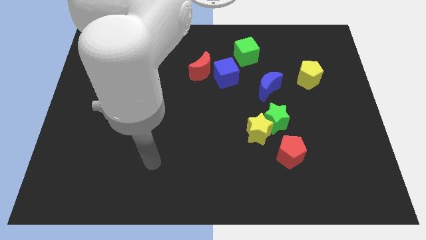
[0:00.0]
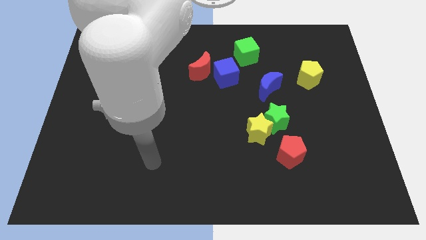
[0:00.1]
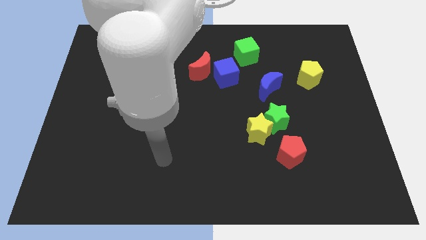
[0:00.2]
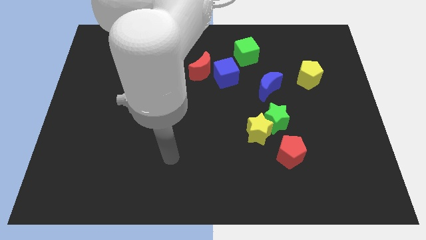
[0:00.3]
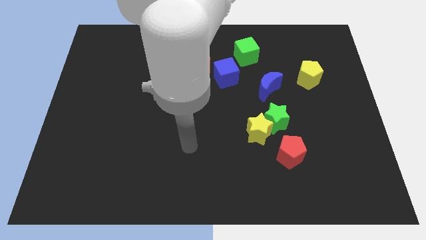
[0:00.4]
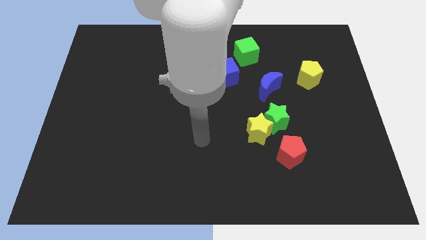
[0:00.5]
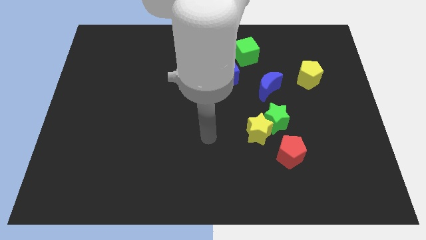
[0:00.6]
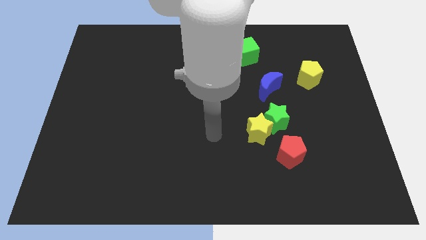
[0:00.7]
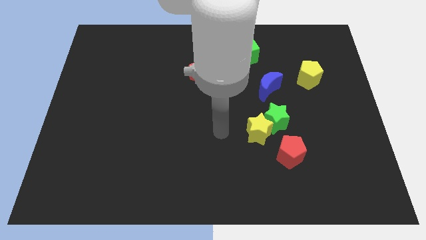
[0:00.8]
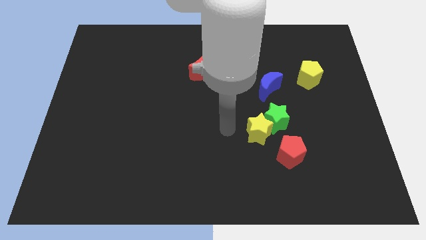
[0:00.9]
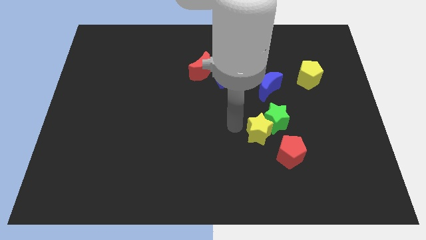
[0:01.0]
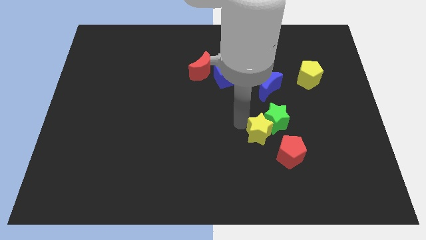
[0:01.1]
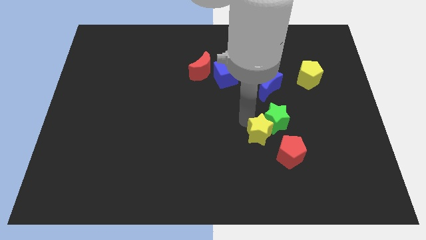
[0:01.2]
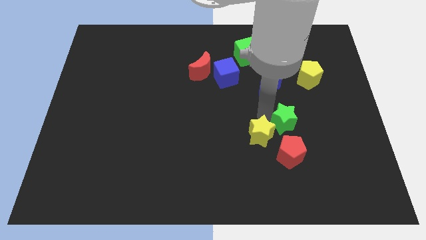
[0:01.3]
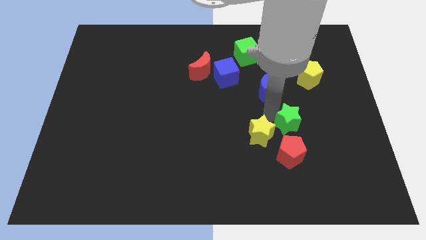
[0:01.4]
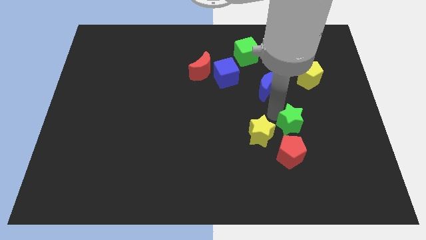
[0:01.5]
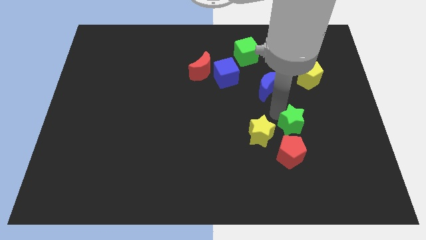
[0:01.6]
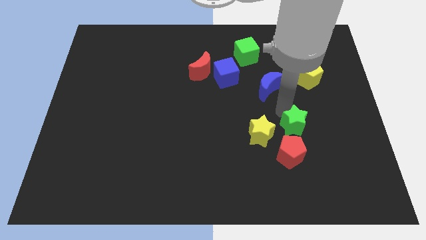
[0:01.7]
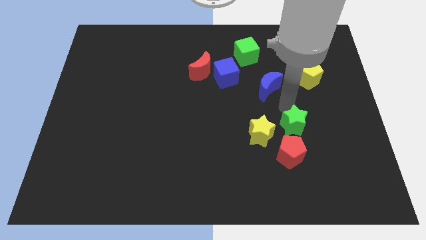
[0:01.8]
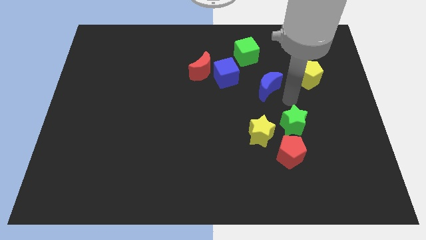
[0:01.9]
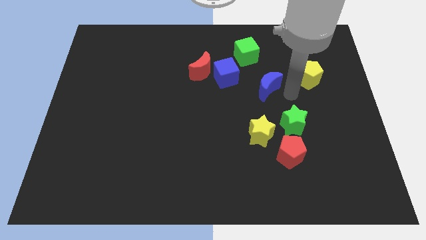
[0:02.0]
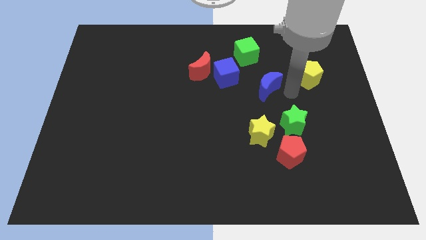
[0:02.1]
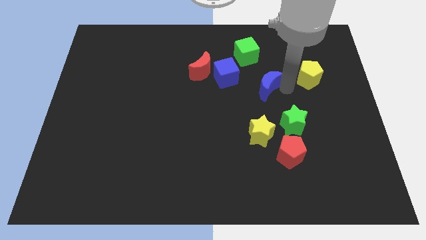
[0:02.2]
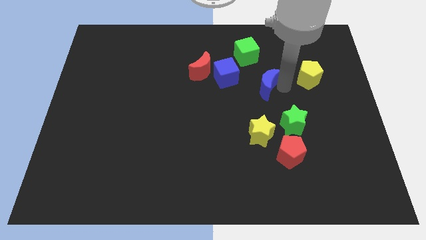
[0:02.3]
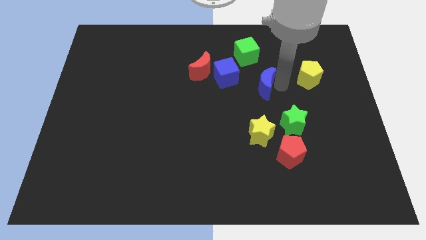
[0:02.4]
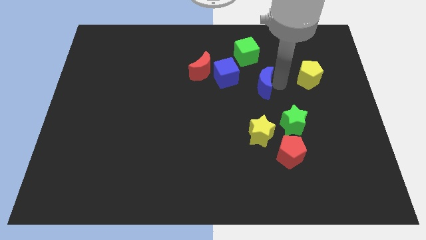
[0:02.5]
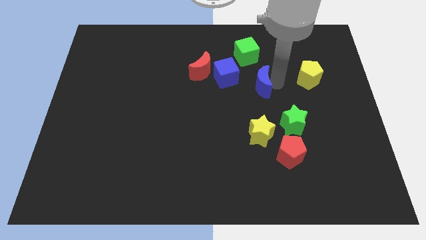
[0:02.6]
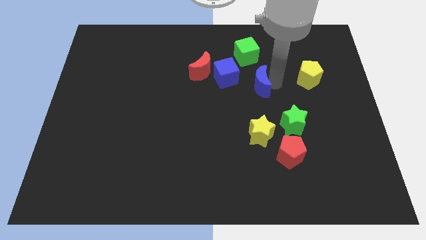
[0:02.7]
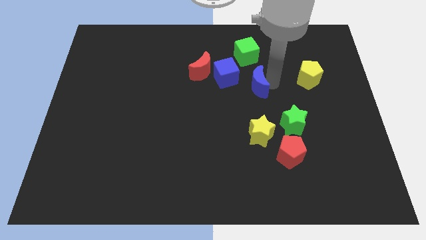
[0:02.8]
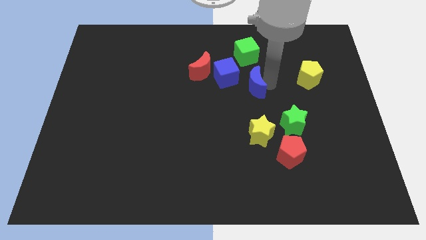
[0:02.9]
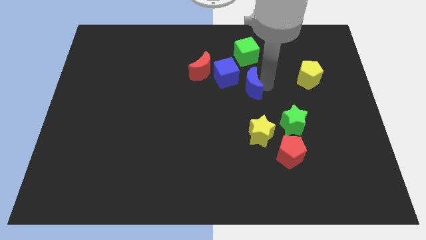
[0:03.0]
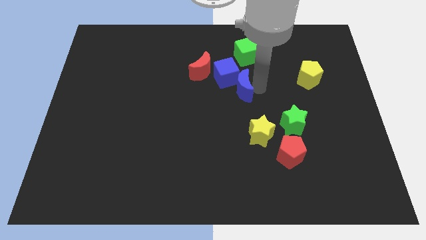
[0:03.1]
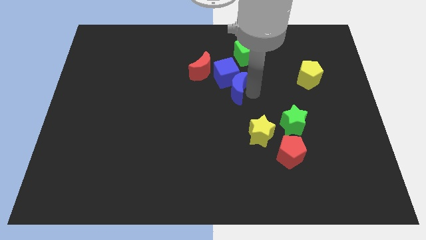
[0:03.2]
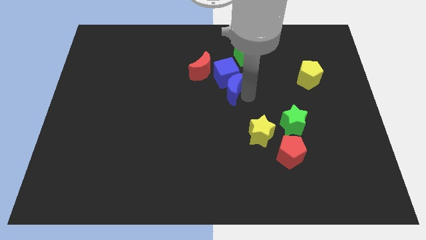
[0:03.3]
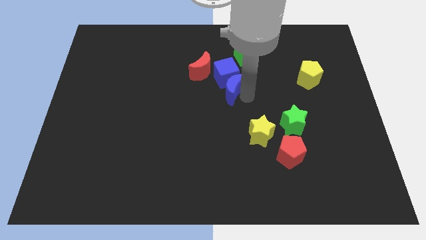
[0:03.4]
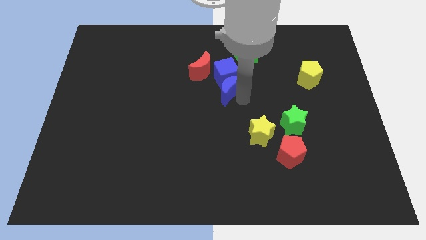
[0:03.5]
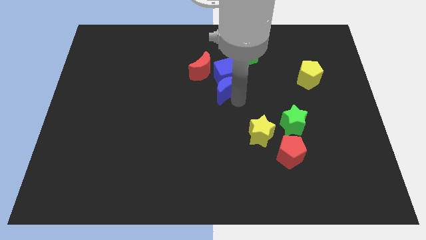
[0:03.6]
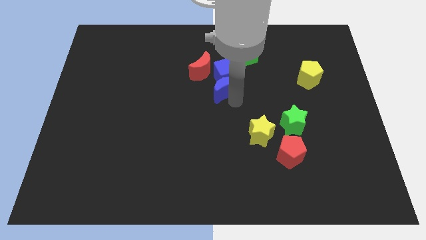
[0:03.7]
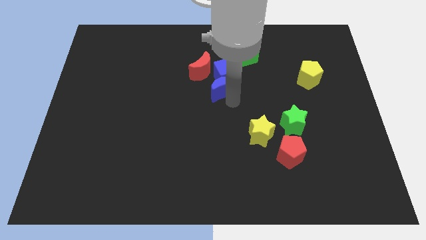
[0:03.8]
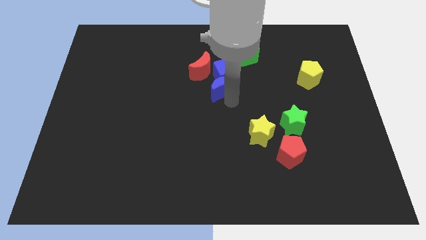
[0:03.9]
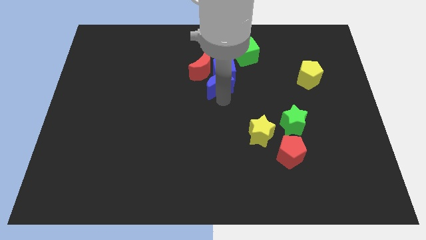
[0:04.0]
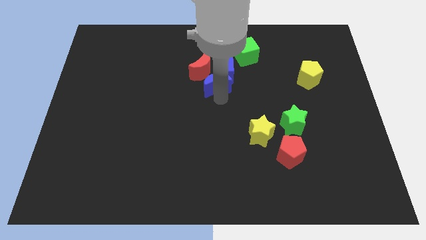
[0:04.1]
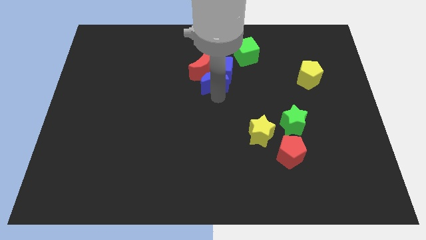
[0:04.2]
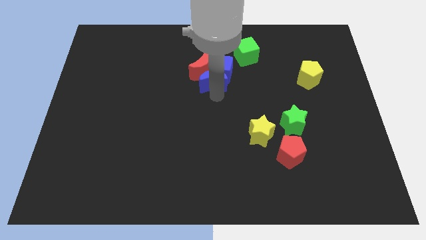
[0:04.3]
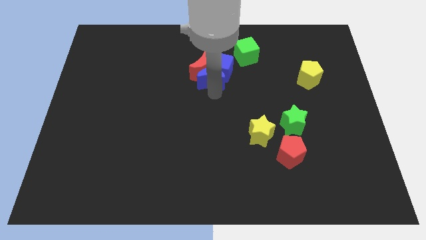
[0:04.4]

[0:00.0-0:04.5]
push the blue moon to the red moon

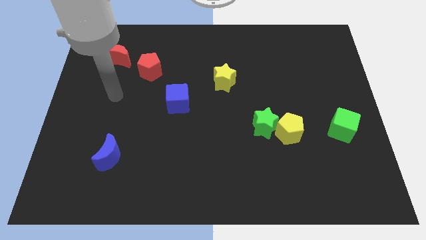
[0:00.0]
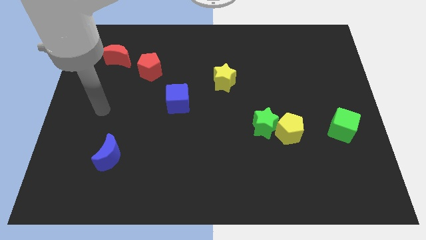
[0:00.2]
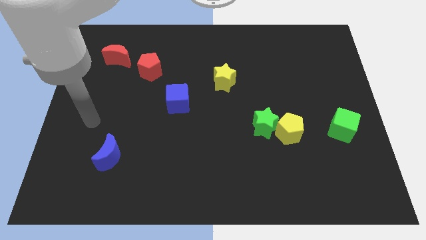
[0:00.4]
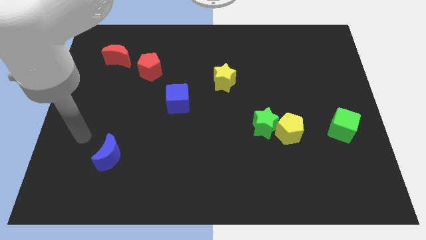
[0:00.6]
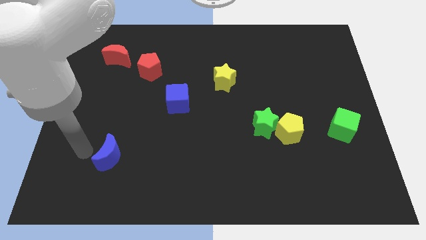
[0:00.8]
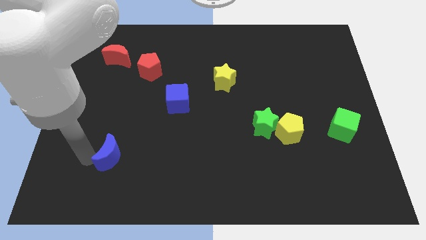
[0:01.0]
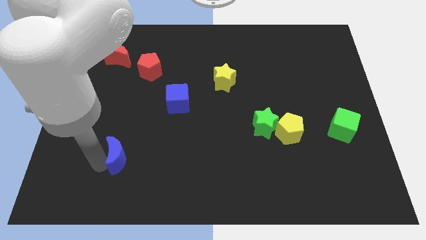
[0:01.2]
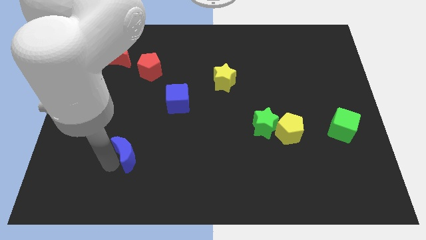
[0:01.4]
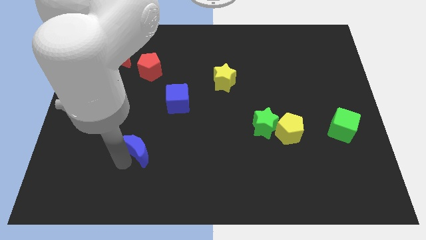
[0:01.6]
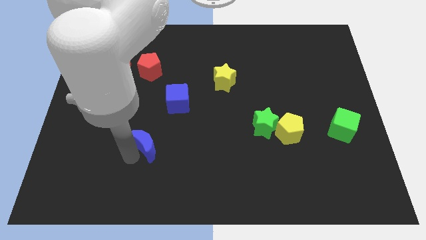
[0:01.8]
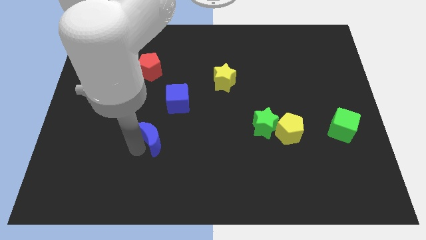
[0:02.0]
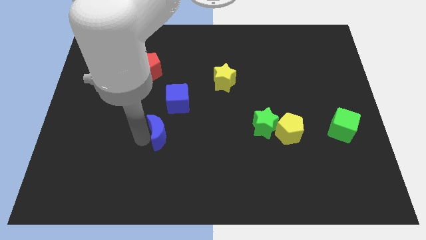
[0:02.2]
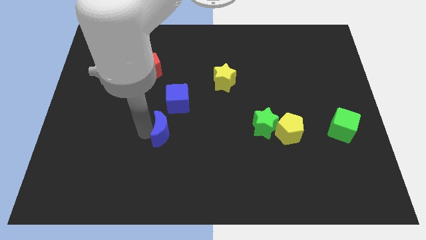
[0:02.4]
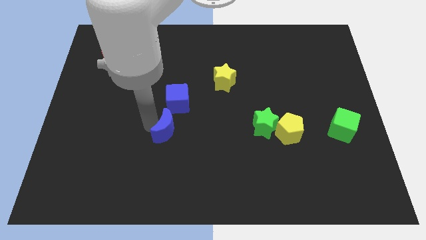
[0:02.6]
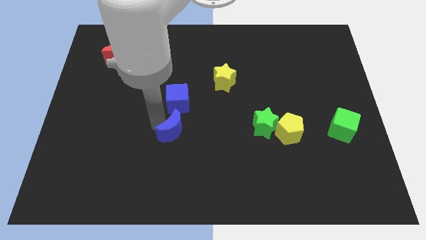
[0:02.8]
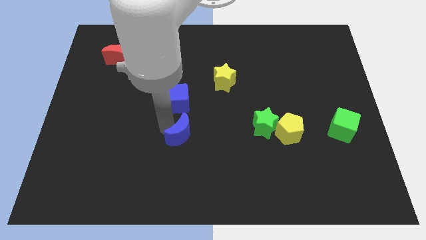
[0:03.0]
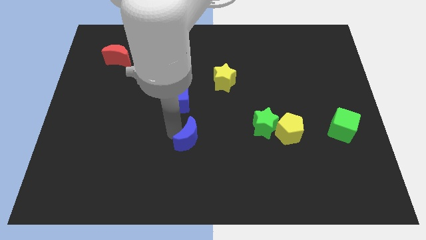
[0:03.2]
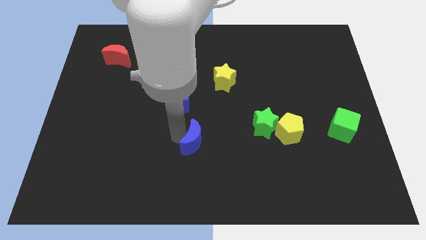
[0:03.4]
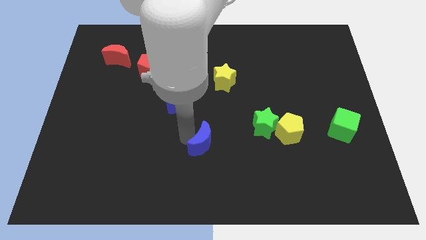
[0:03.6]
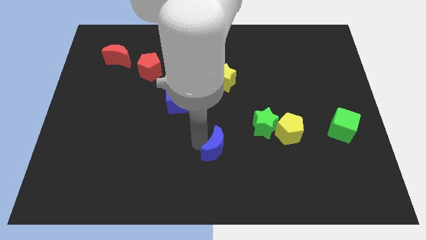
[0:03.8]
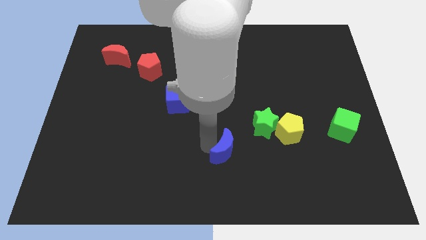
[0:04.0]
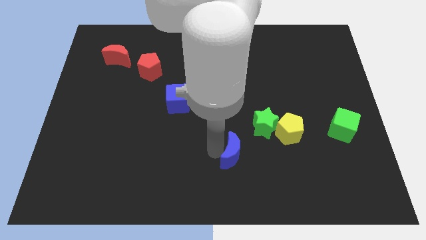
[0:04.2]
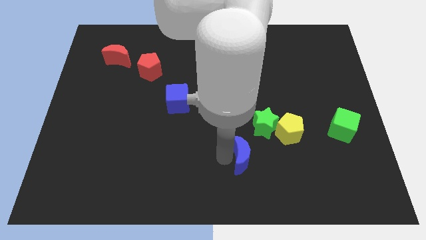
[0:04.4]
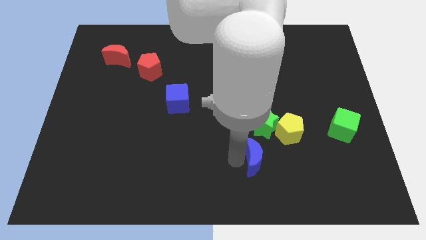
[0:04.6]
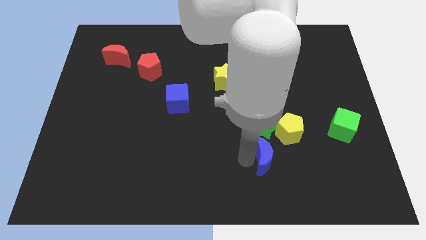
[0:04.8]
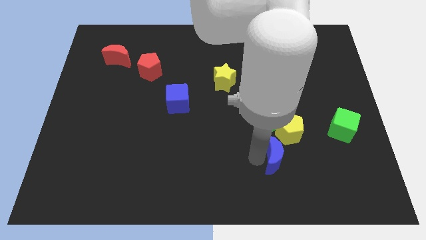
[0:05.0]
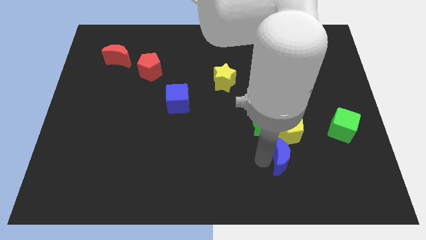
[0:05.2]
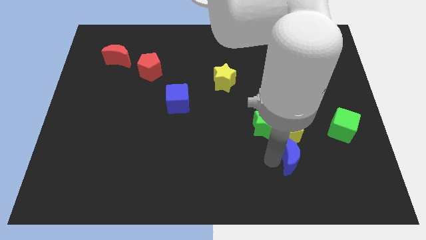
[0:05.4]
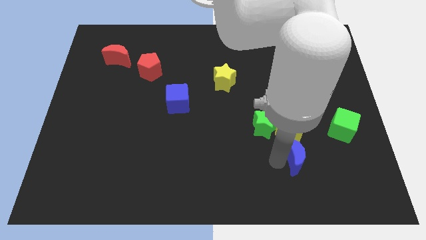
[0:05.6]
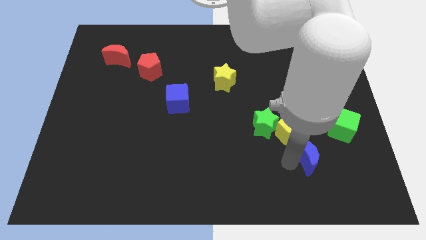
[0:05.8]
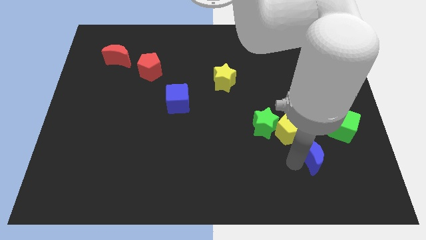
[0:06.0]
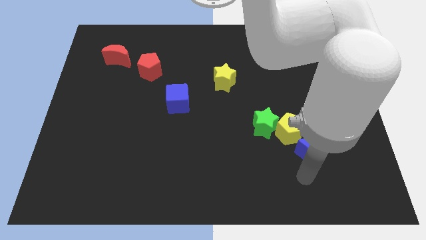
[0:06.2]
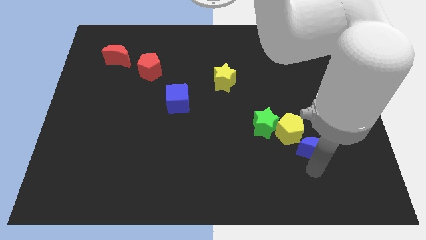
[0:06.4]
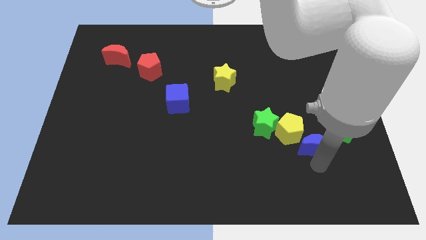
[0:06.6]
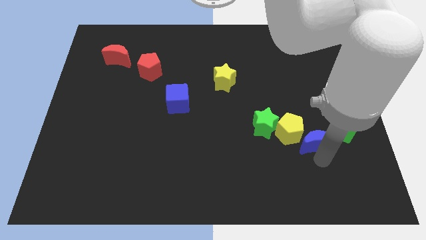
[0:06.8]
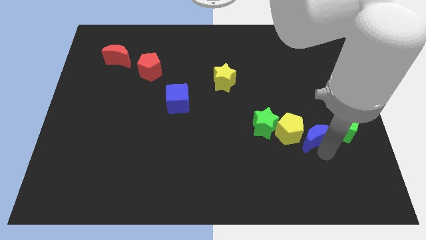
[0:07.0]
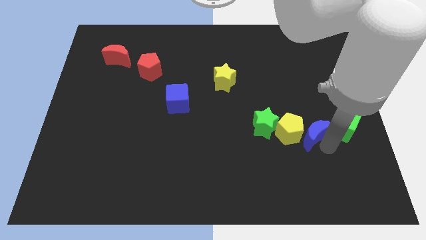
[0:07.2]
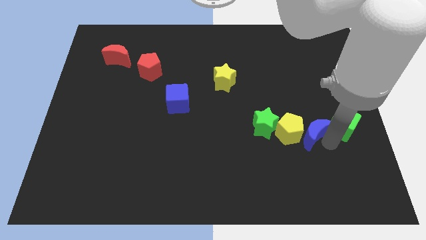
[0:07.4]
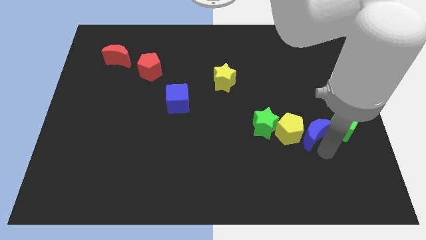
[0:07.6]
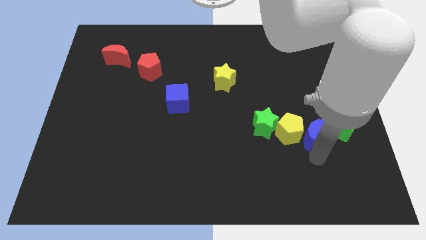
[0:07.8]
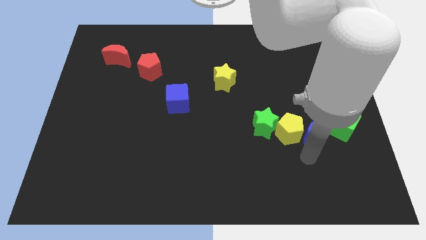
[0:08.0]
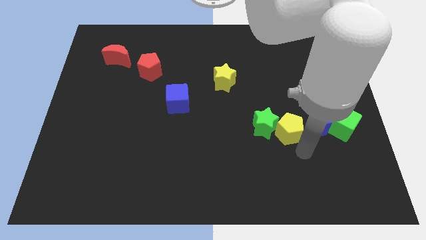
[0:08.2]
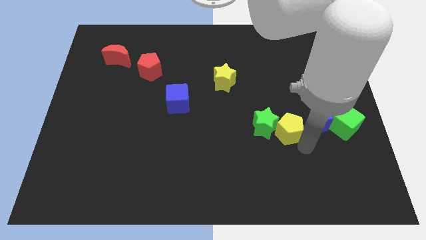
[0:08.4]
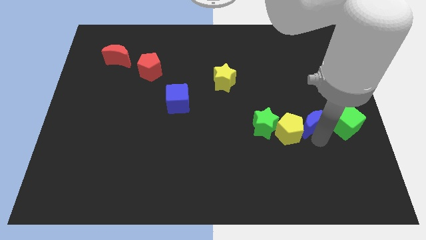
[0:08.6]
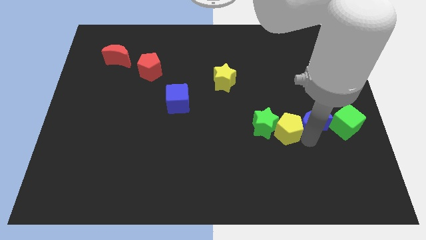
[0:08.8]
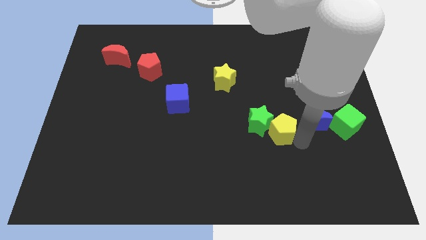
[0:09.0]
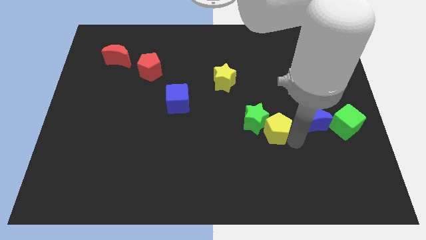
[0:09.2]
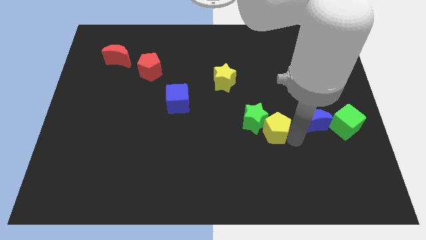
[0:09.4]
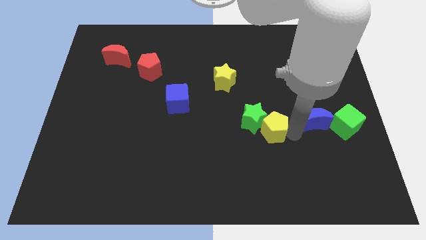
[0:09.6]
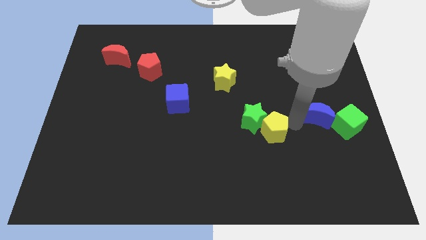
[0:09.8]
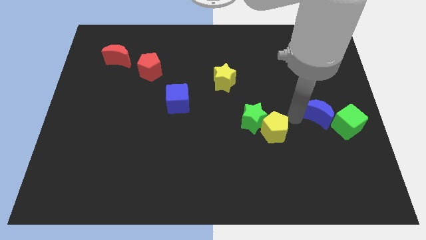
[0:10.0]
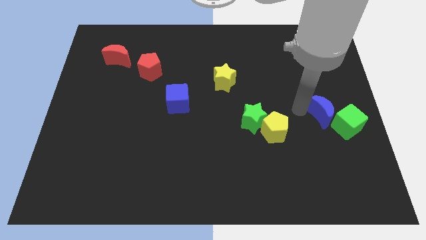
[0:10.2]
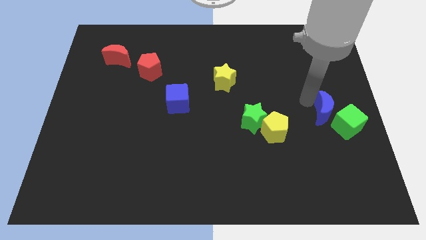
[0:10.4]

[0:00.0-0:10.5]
put the blue moon to the green cube
